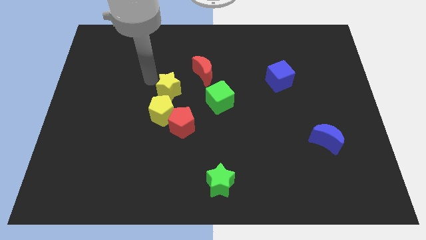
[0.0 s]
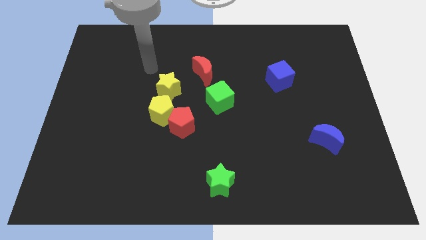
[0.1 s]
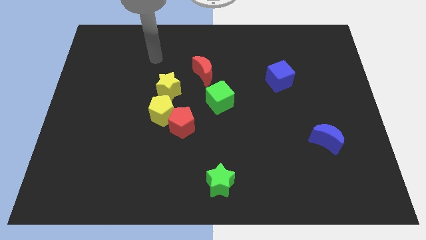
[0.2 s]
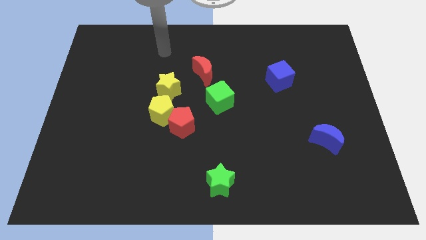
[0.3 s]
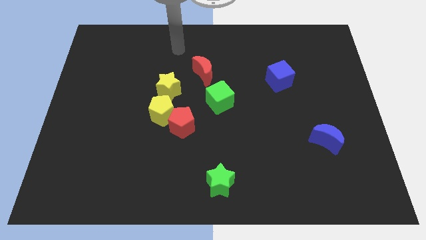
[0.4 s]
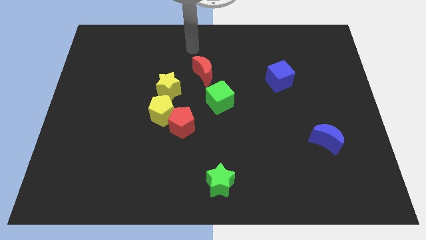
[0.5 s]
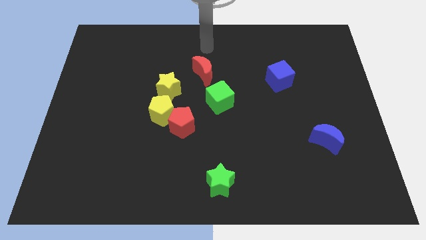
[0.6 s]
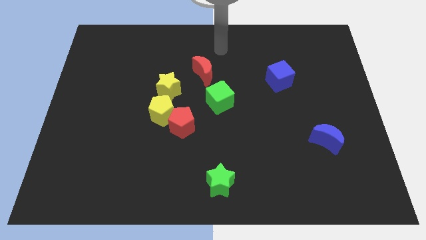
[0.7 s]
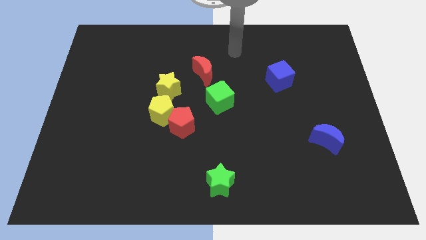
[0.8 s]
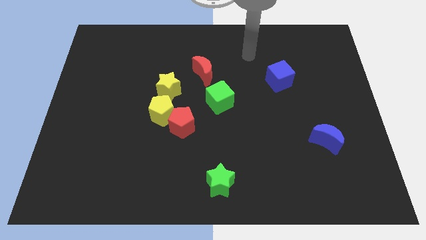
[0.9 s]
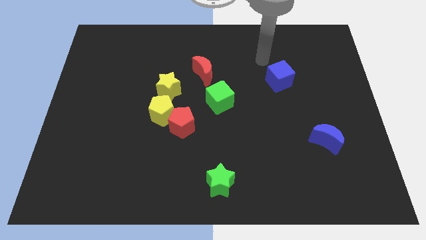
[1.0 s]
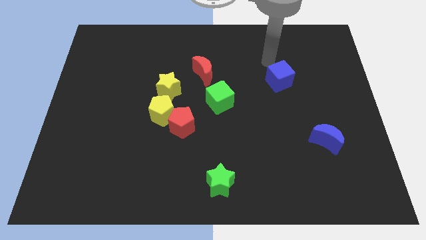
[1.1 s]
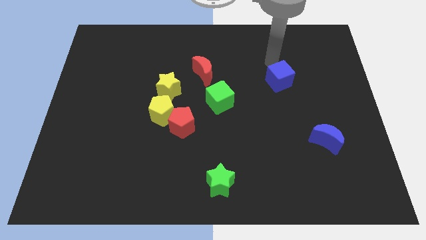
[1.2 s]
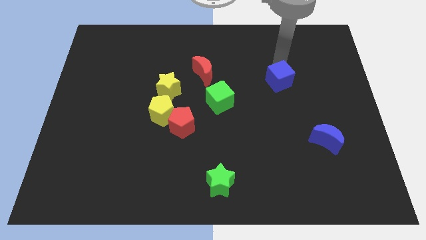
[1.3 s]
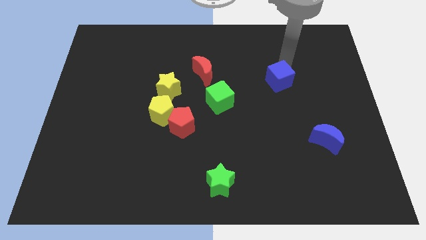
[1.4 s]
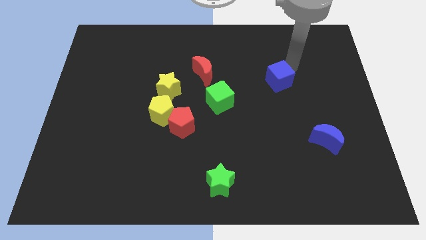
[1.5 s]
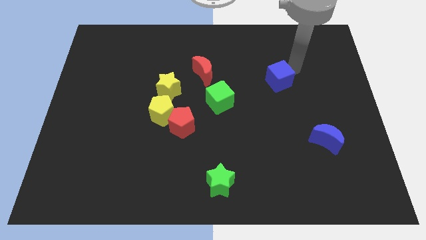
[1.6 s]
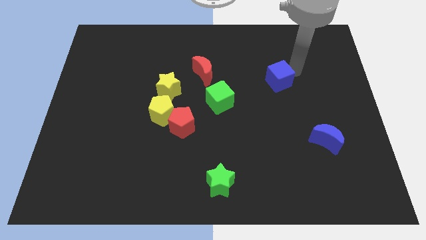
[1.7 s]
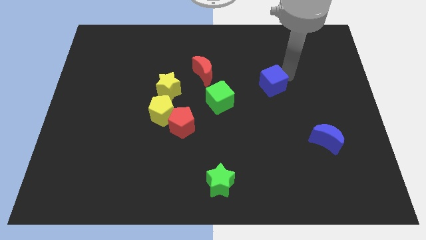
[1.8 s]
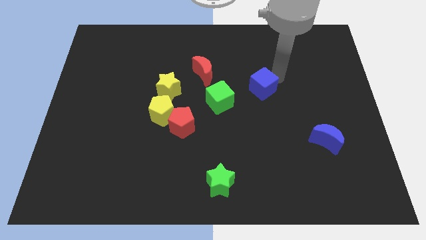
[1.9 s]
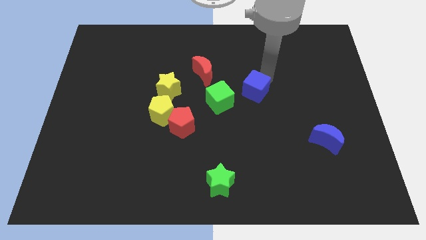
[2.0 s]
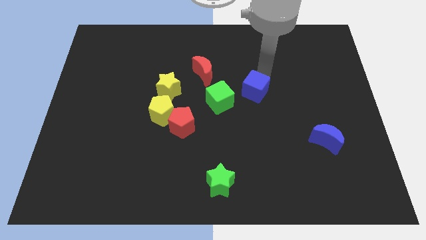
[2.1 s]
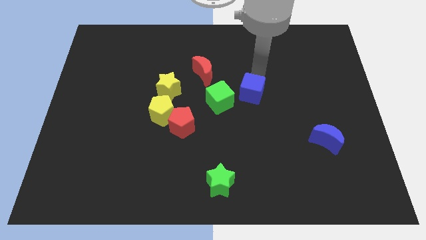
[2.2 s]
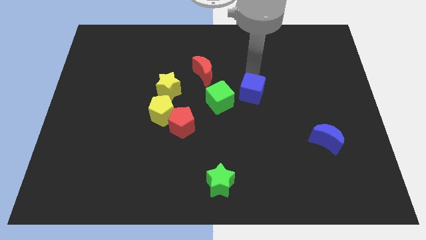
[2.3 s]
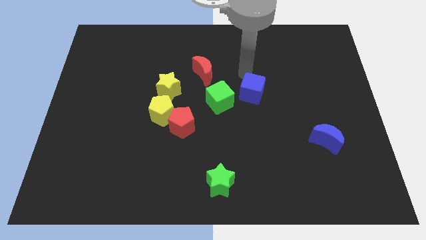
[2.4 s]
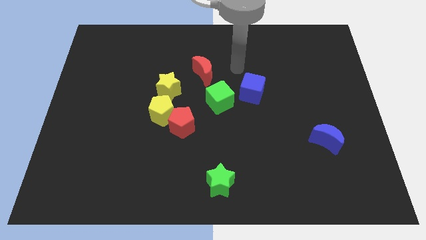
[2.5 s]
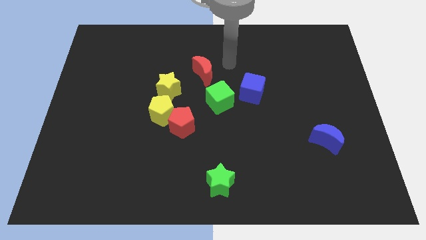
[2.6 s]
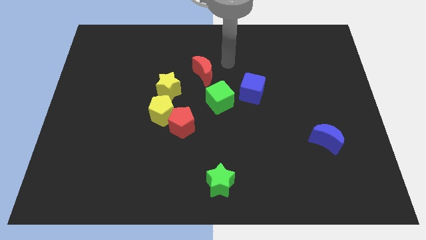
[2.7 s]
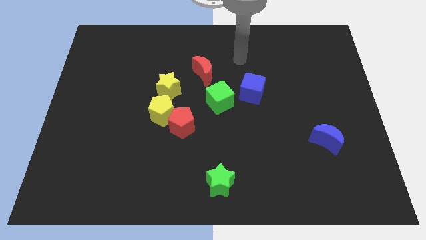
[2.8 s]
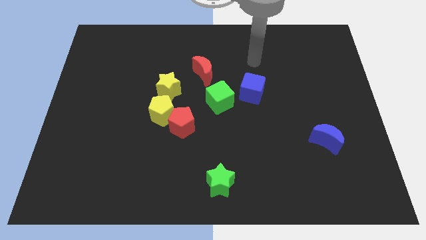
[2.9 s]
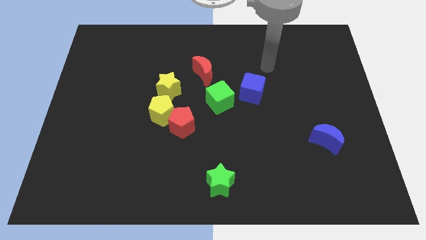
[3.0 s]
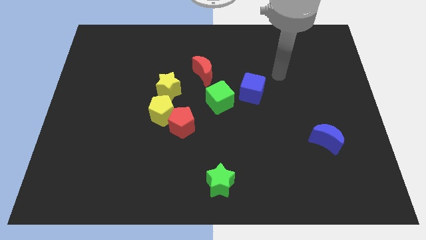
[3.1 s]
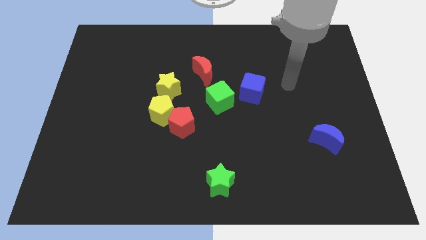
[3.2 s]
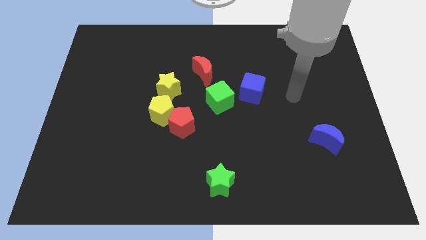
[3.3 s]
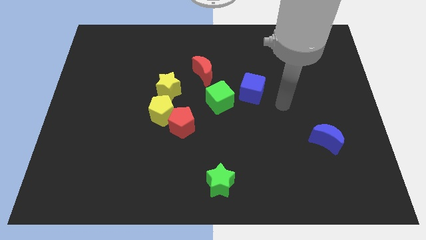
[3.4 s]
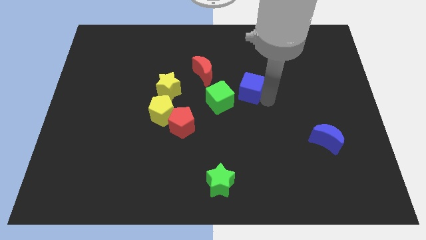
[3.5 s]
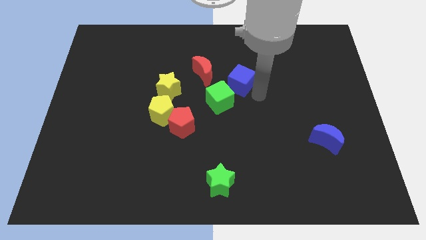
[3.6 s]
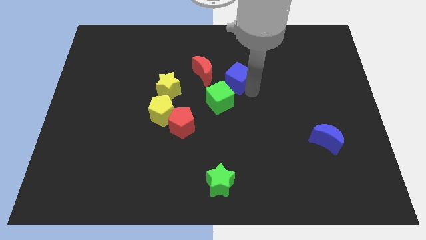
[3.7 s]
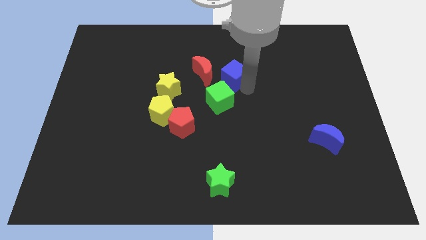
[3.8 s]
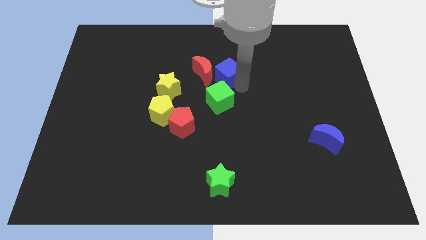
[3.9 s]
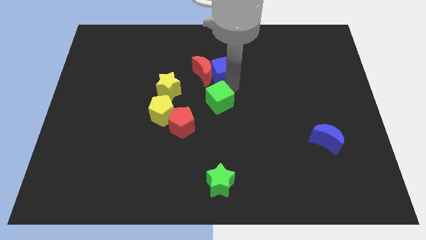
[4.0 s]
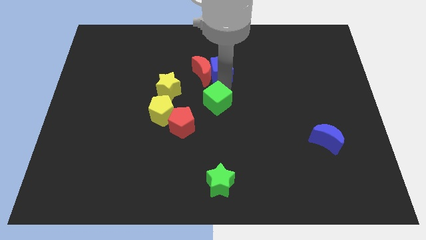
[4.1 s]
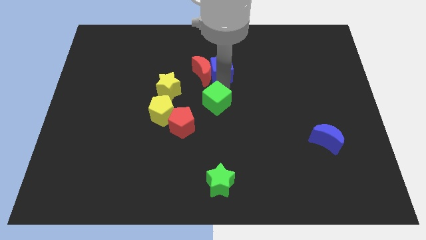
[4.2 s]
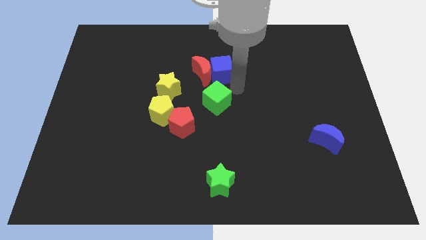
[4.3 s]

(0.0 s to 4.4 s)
push the blue cube into the red crescent

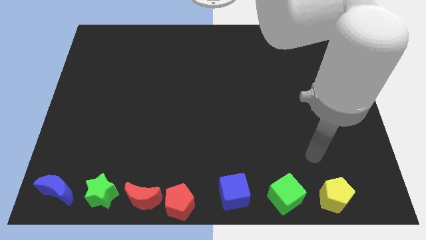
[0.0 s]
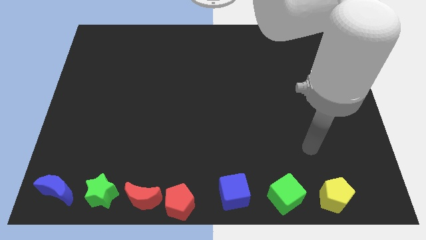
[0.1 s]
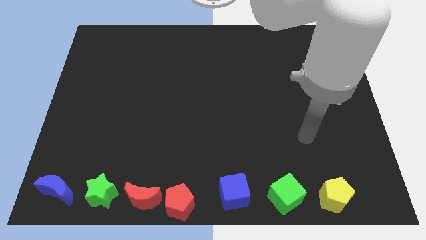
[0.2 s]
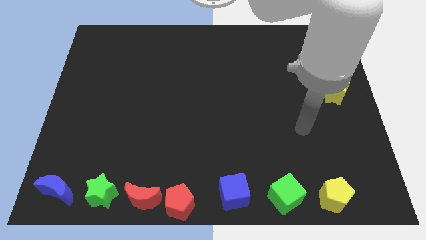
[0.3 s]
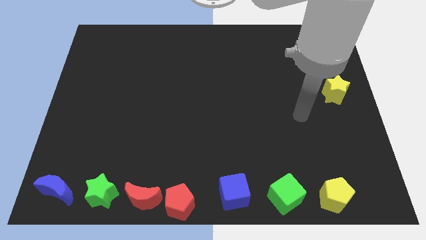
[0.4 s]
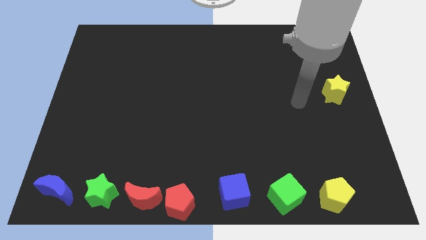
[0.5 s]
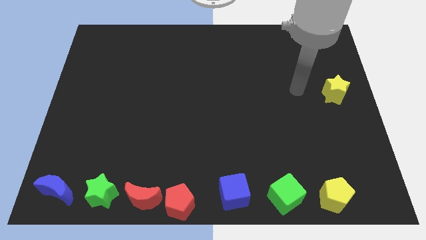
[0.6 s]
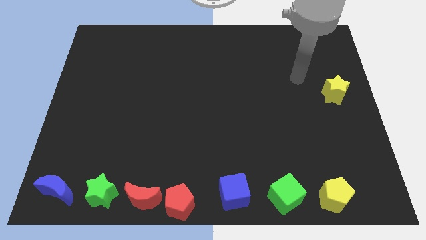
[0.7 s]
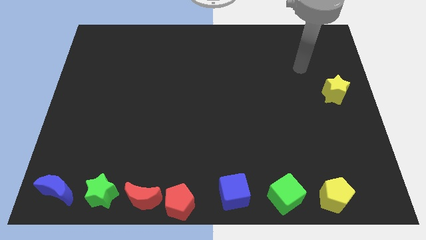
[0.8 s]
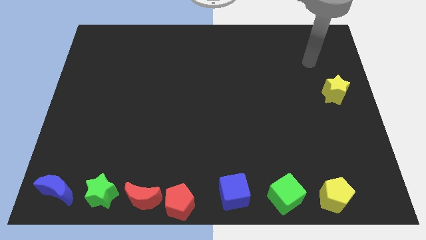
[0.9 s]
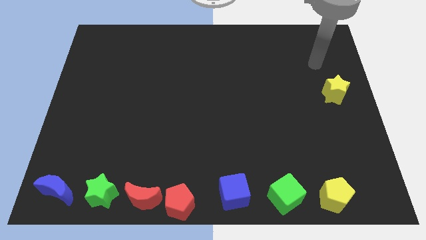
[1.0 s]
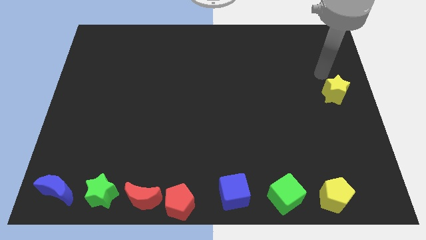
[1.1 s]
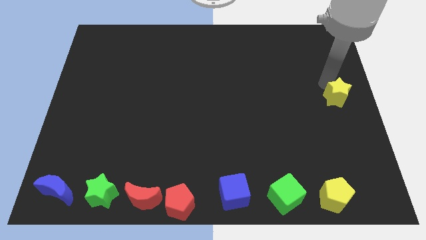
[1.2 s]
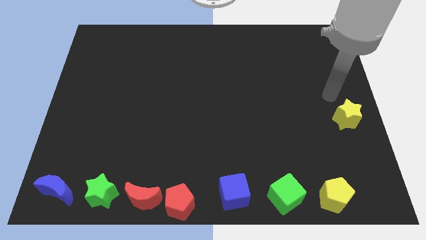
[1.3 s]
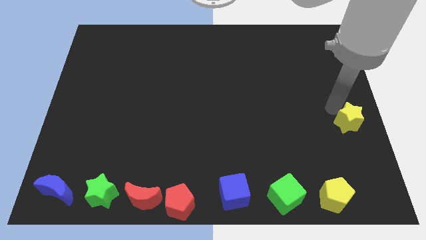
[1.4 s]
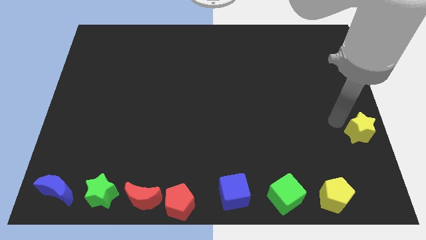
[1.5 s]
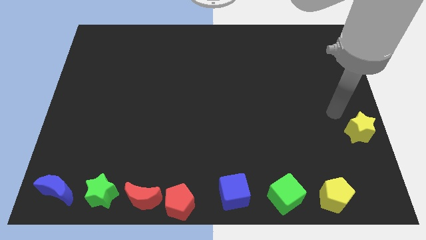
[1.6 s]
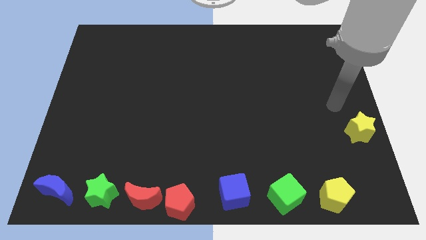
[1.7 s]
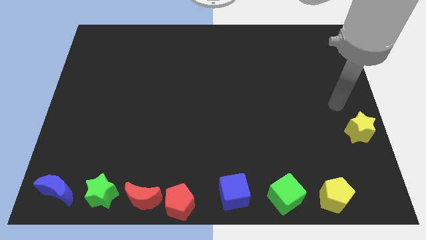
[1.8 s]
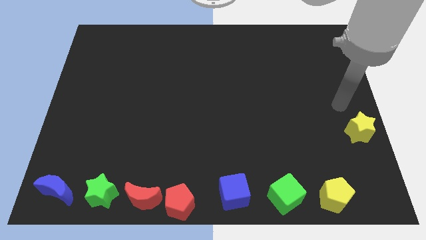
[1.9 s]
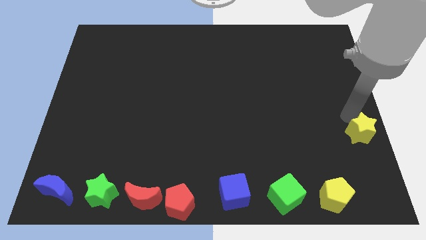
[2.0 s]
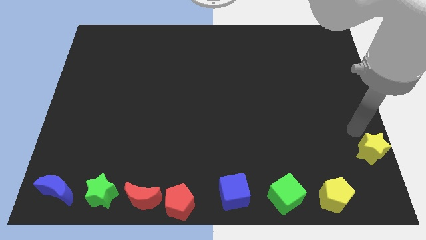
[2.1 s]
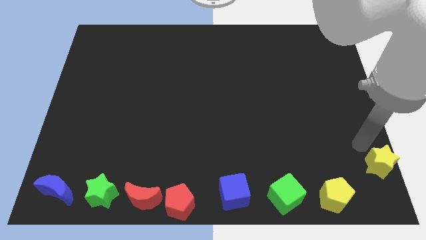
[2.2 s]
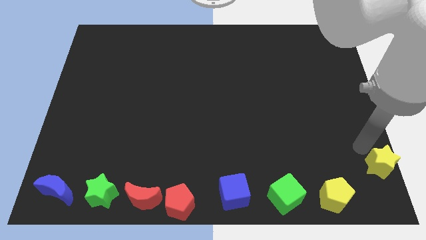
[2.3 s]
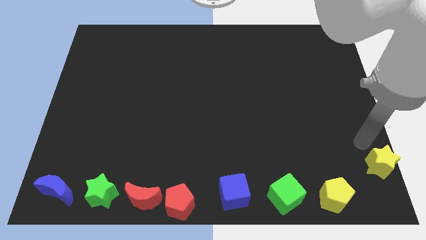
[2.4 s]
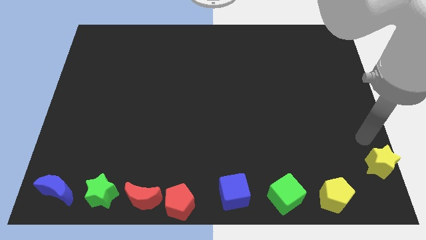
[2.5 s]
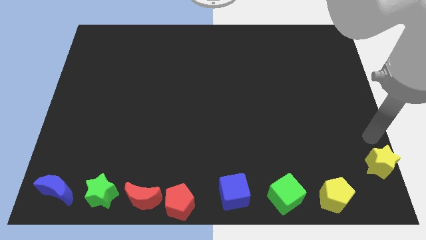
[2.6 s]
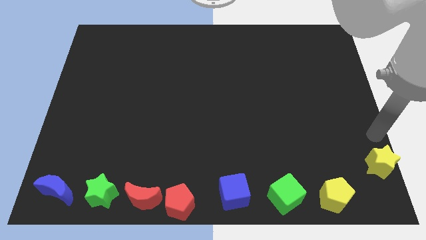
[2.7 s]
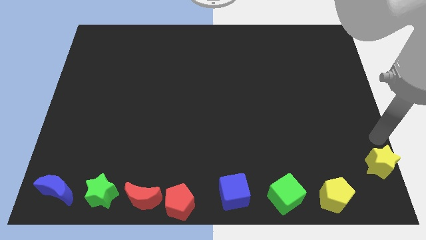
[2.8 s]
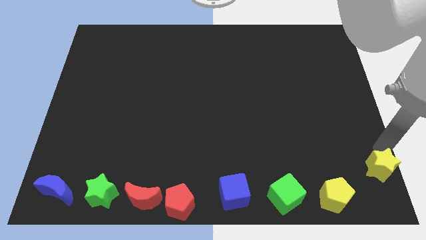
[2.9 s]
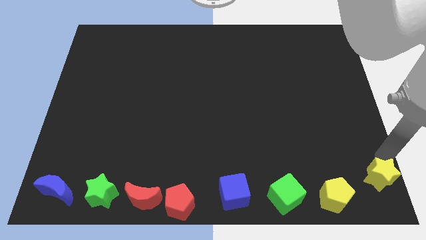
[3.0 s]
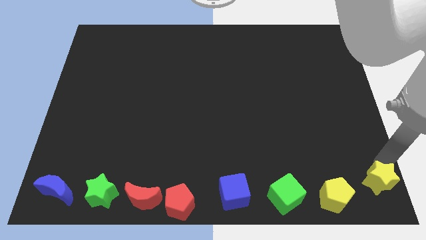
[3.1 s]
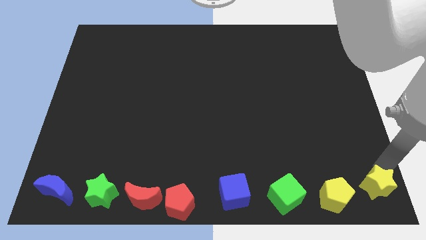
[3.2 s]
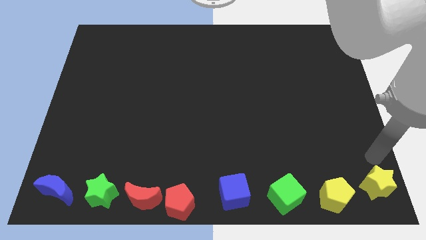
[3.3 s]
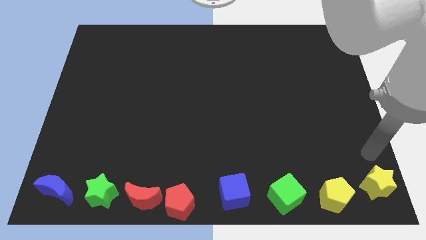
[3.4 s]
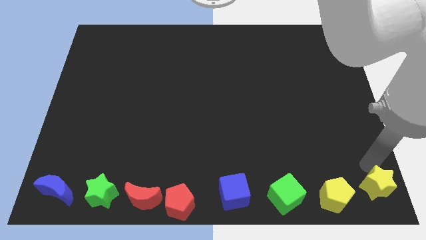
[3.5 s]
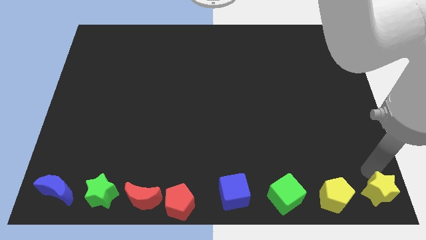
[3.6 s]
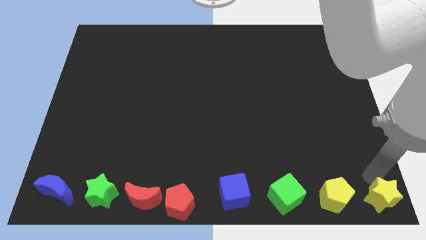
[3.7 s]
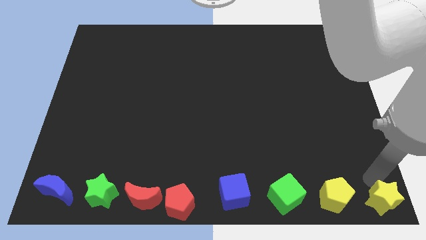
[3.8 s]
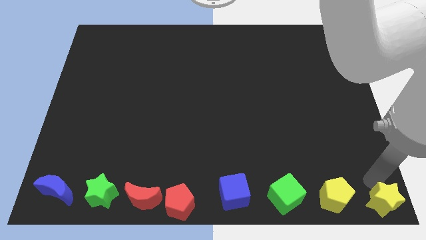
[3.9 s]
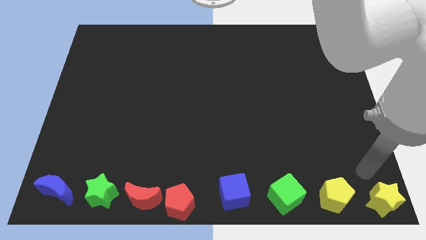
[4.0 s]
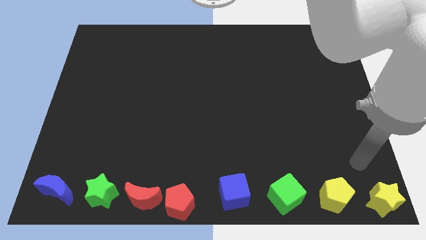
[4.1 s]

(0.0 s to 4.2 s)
slide the yellow star at the bottom right corner of the board
